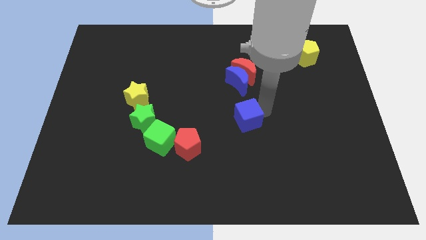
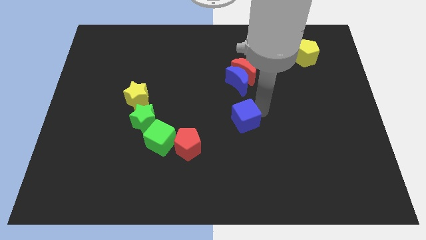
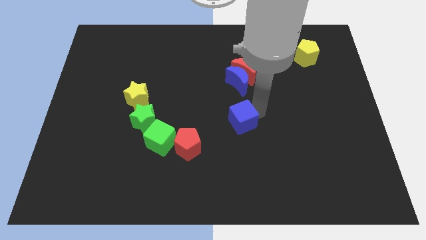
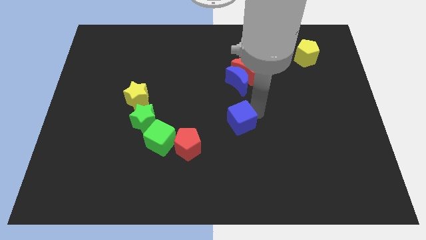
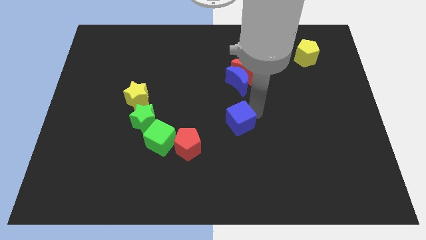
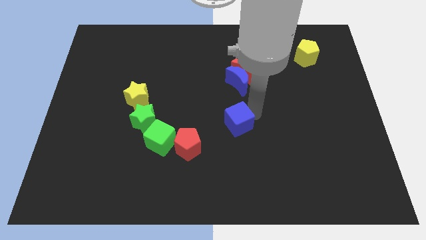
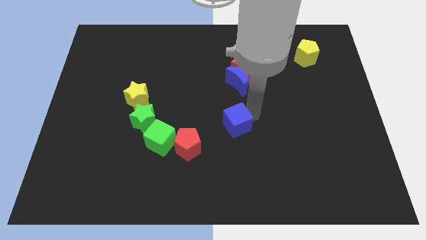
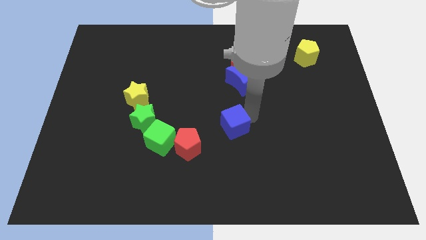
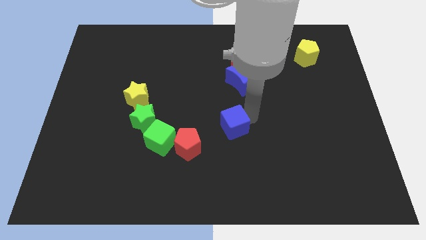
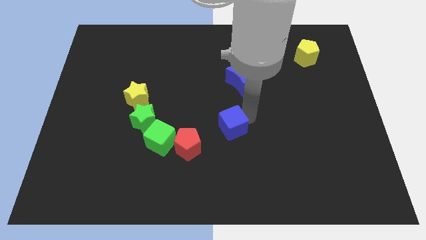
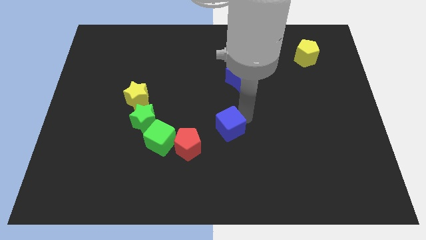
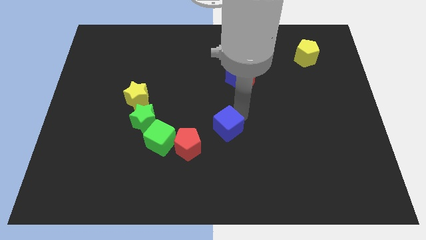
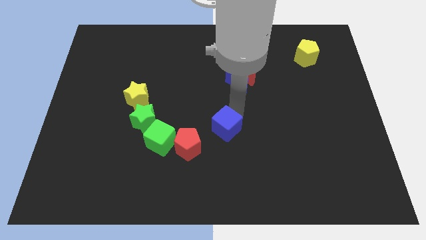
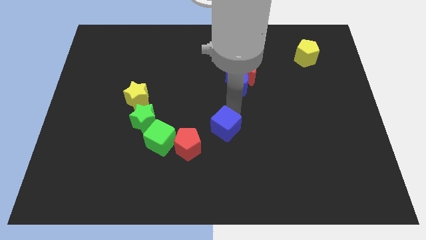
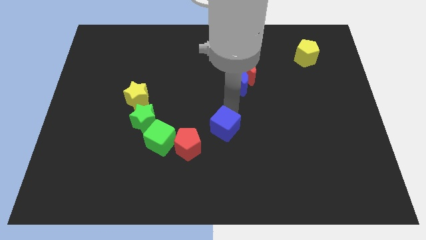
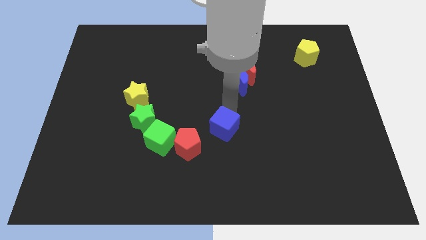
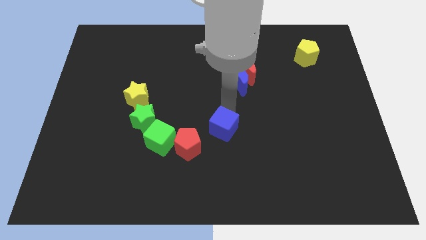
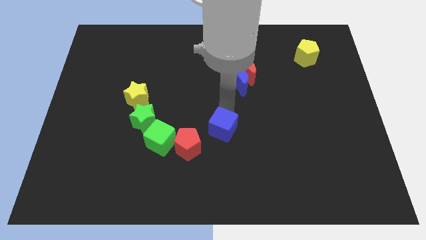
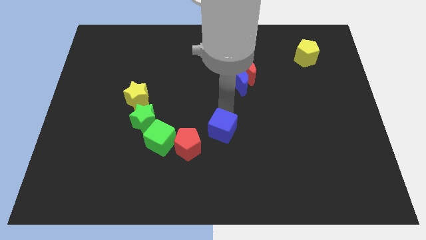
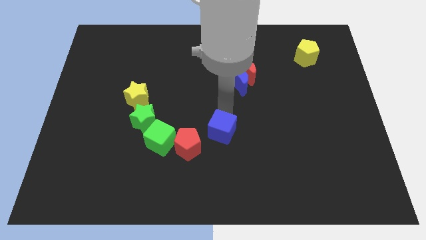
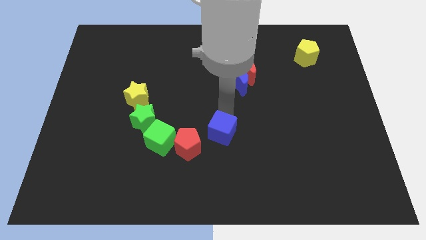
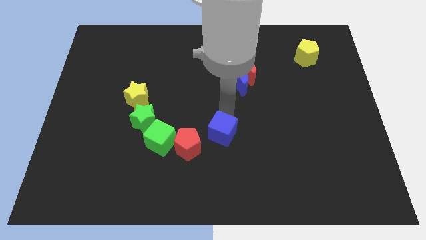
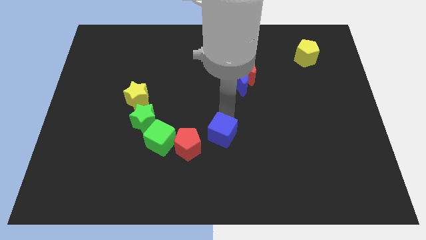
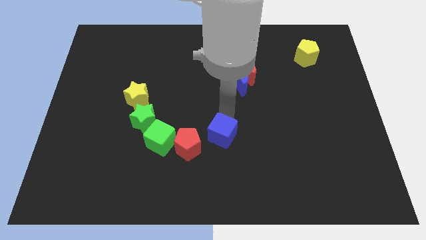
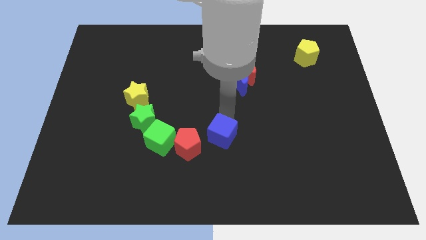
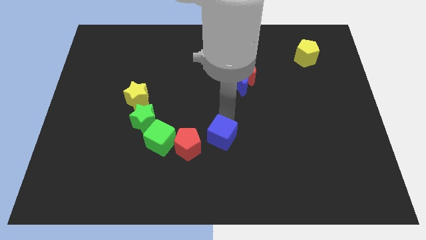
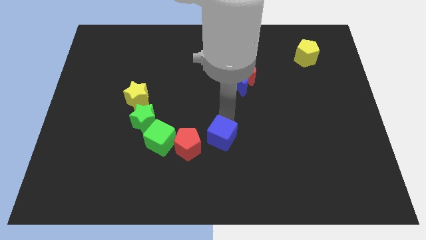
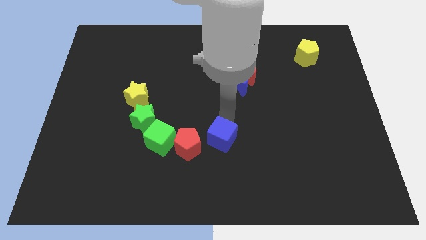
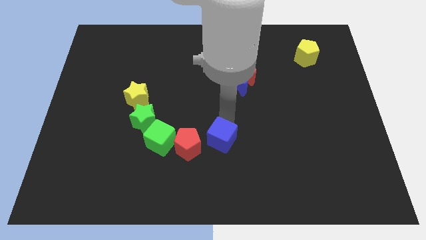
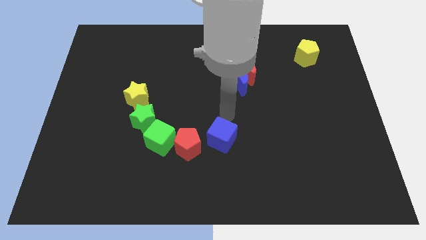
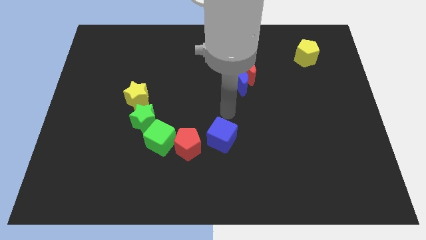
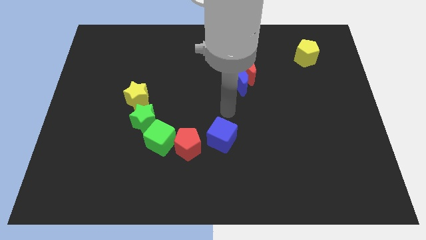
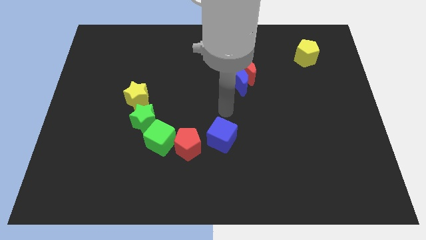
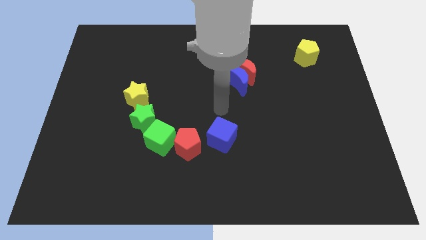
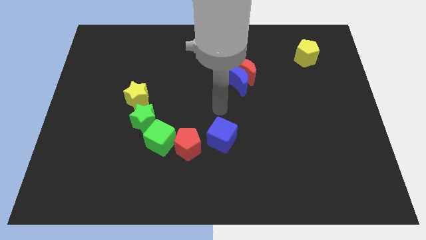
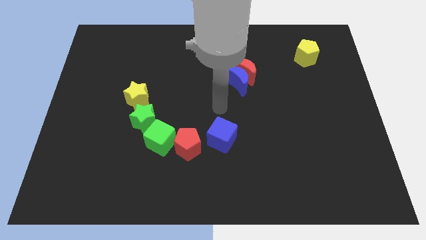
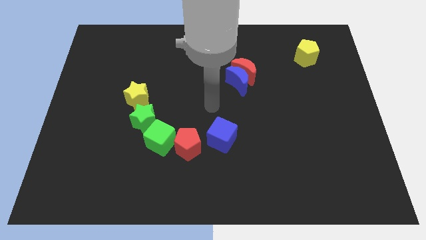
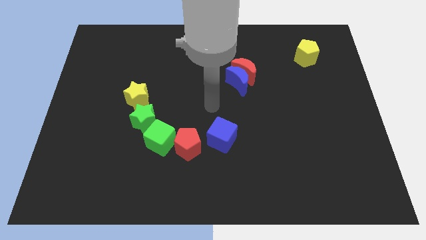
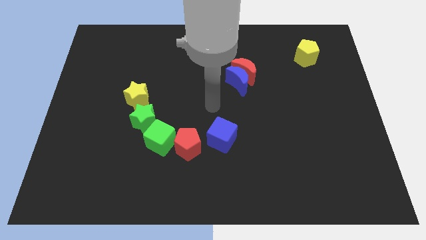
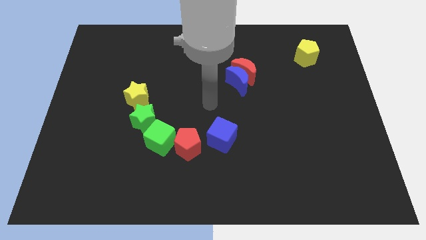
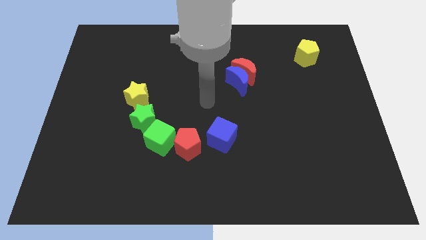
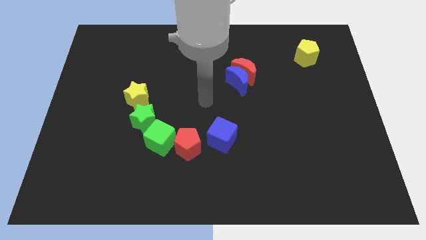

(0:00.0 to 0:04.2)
place the blue cube to the right of the red pentagon

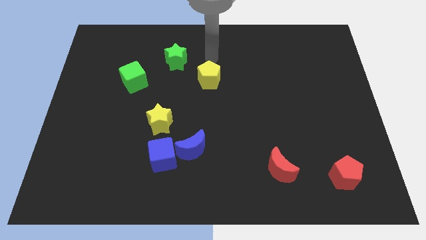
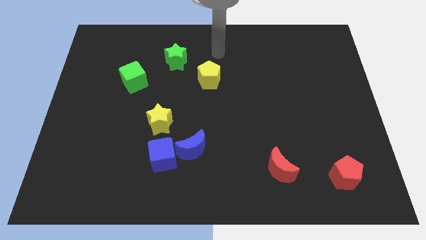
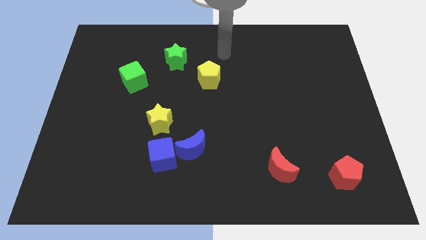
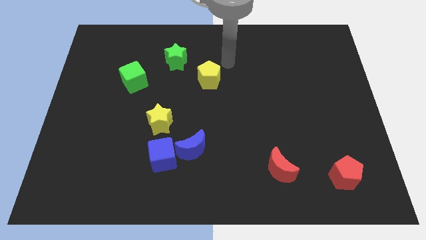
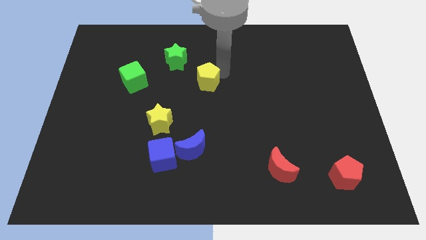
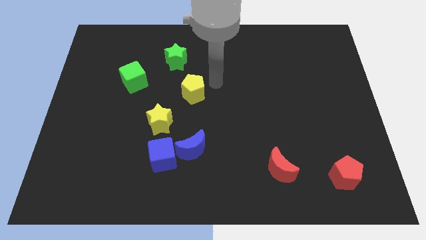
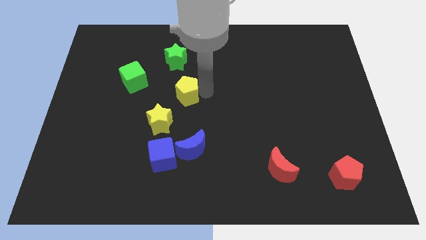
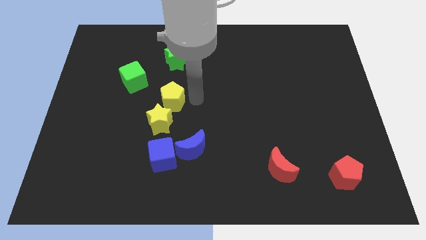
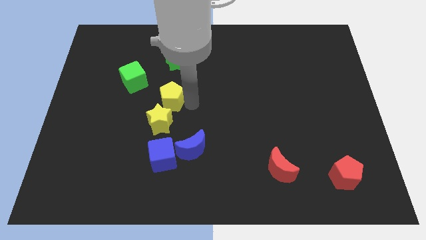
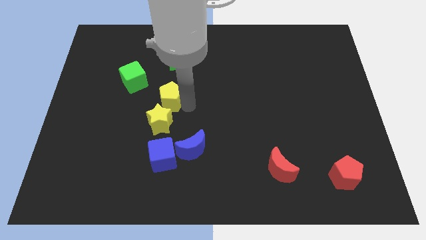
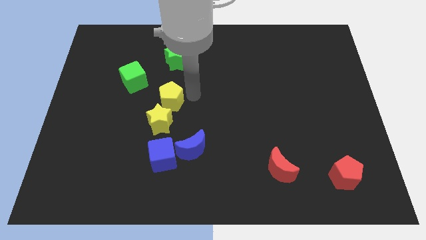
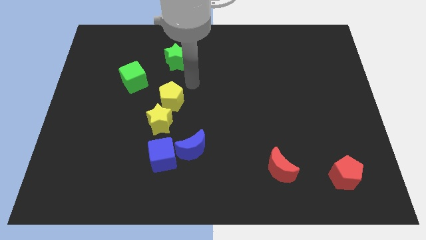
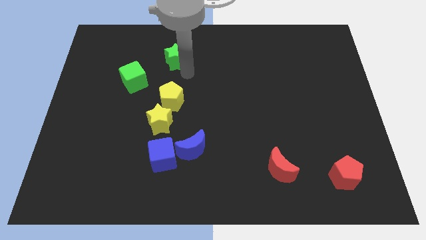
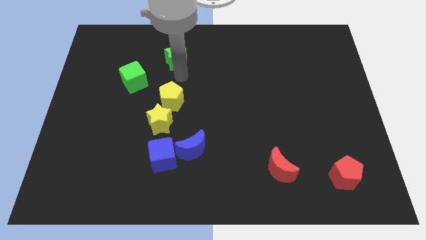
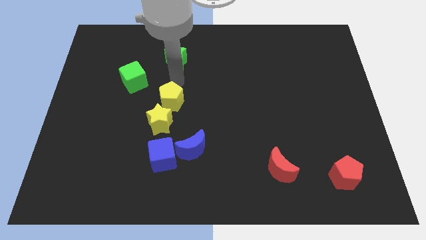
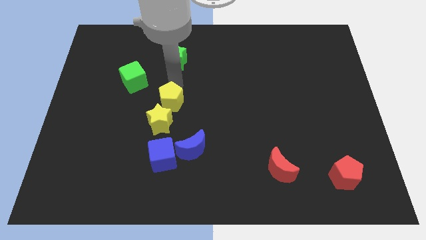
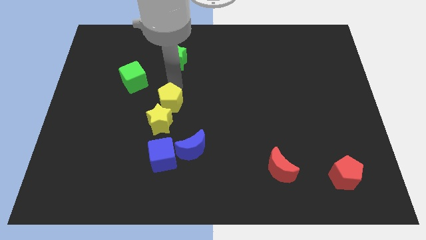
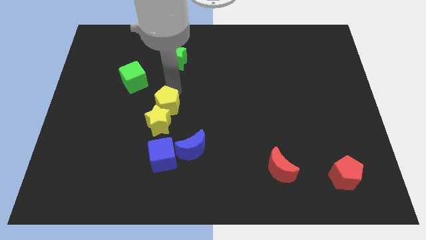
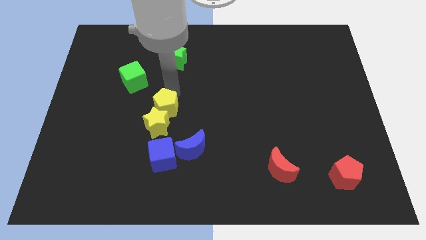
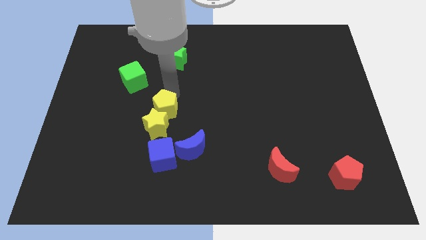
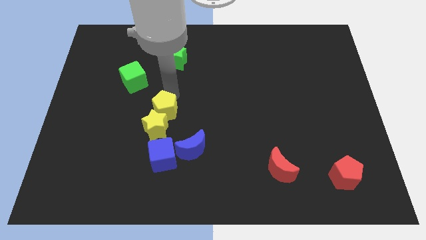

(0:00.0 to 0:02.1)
move the yellow pentagon into the yellow star

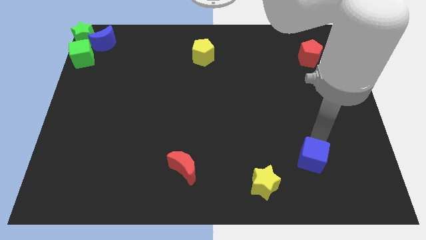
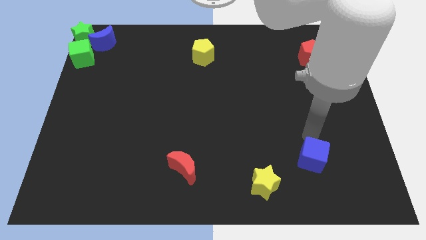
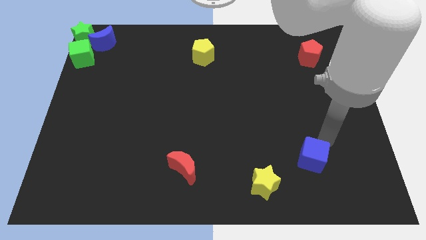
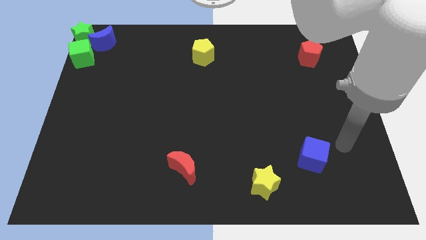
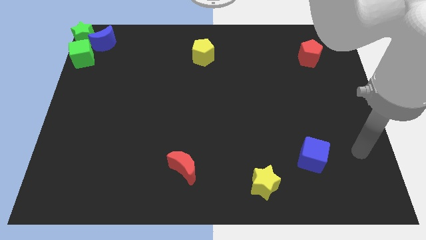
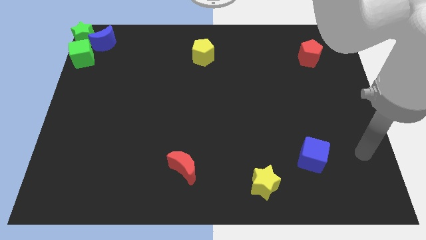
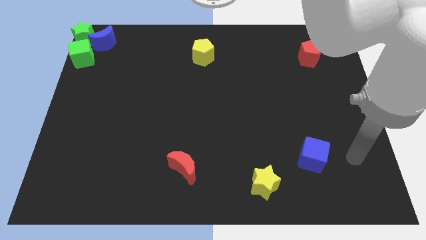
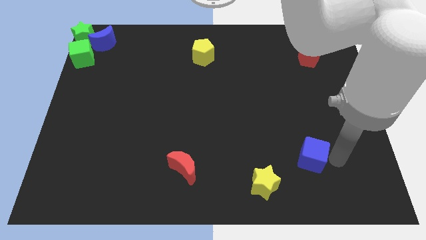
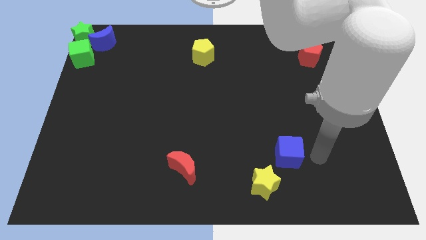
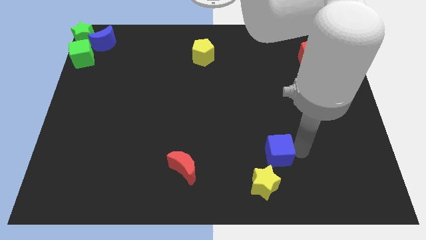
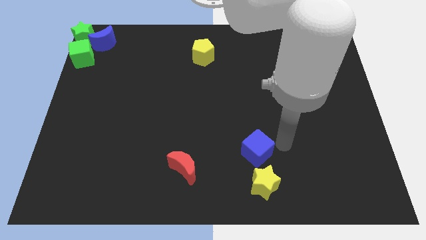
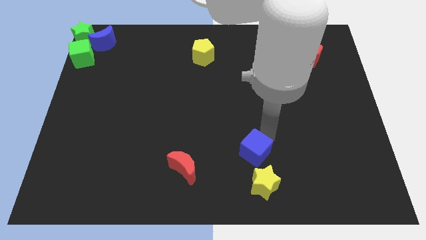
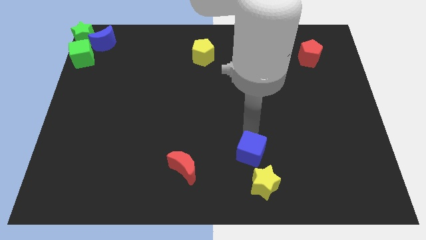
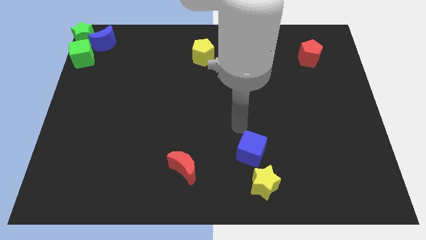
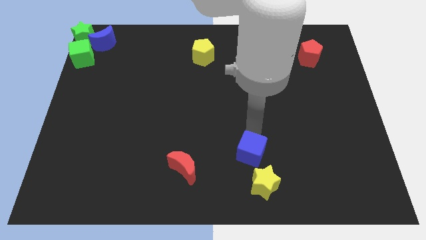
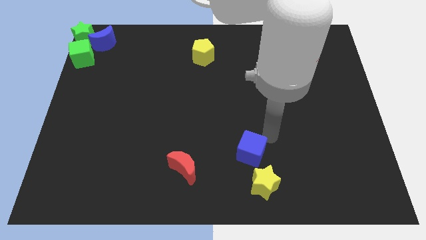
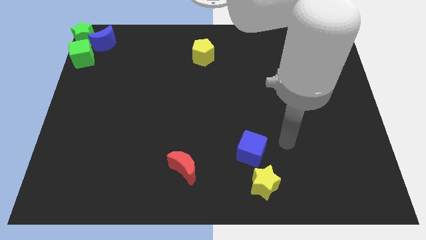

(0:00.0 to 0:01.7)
place the blue cube at the top of the yellow star

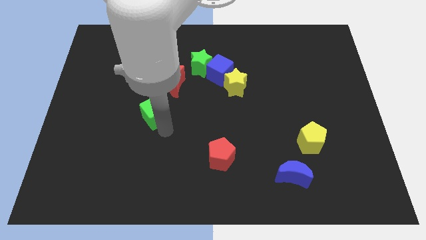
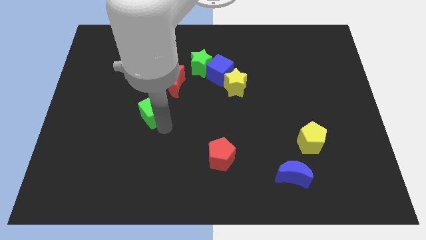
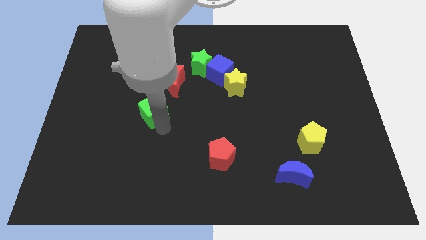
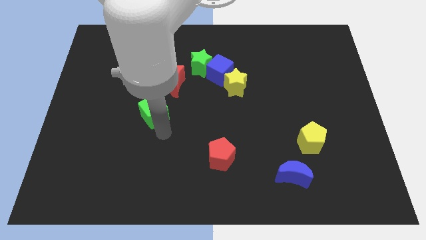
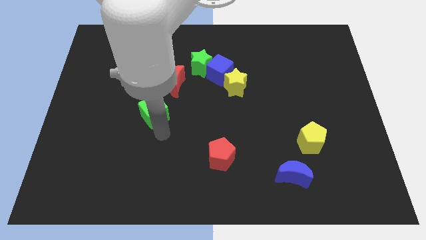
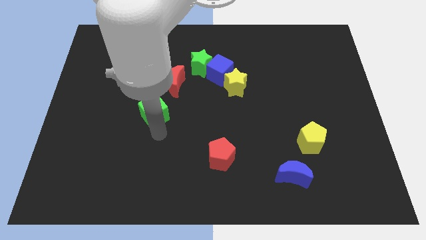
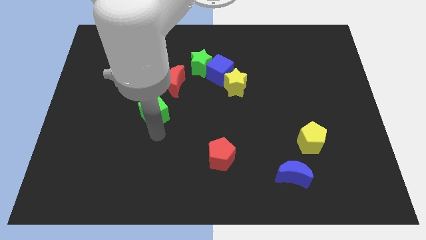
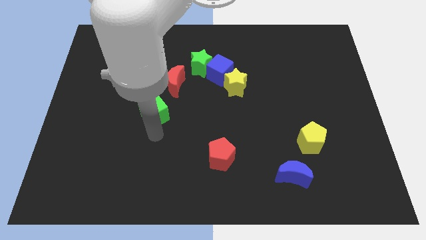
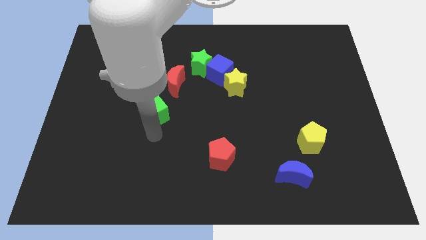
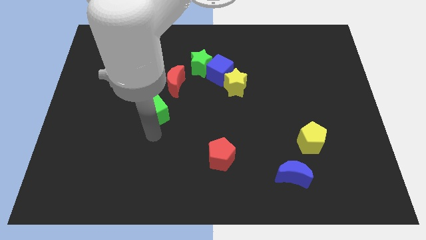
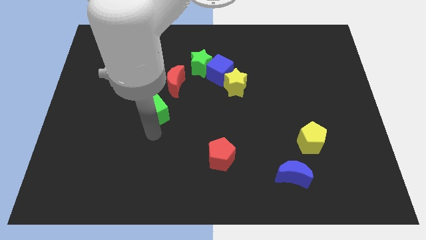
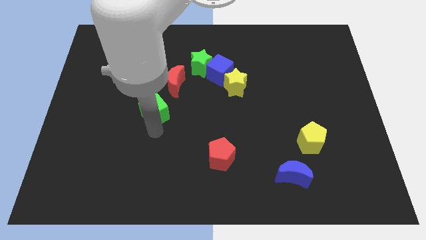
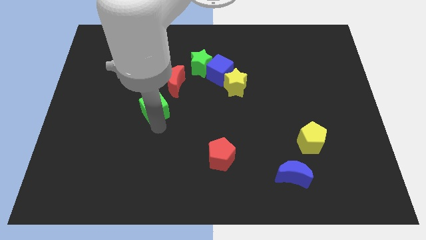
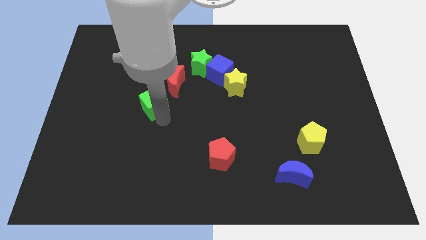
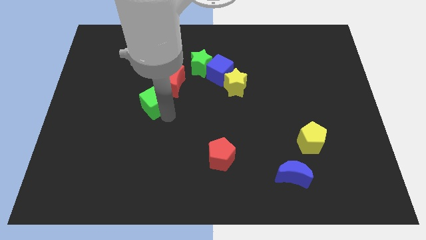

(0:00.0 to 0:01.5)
push the green cube towards the top side
